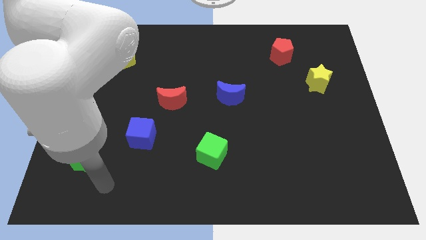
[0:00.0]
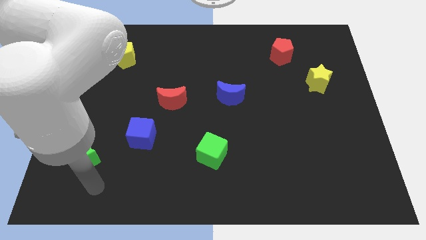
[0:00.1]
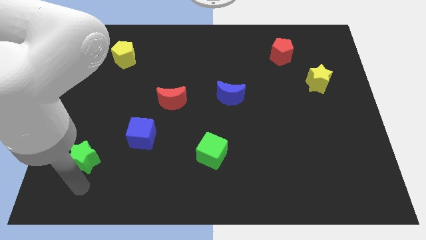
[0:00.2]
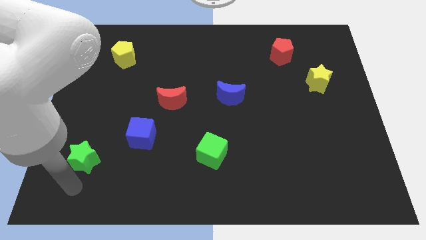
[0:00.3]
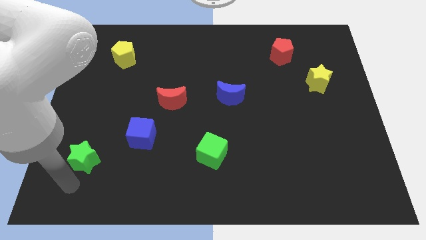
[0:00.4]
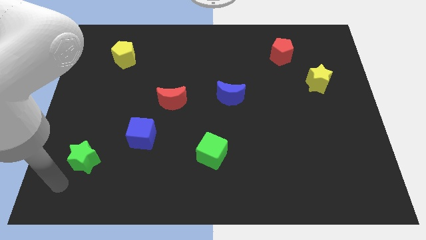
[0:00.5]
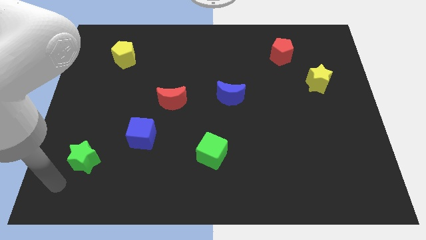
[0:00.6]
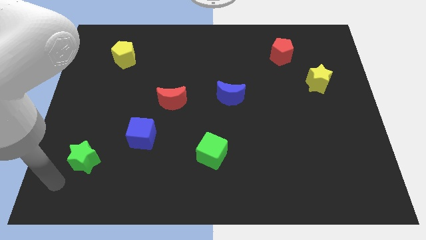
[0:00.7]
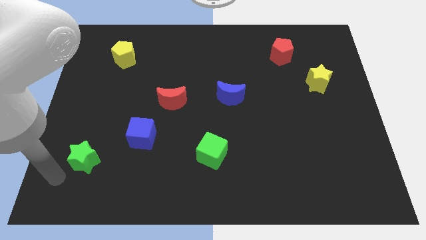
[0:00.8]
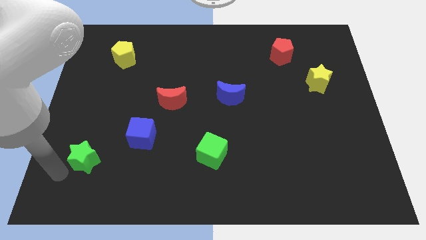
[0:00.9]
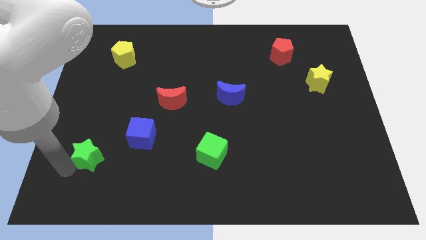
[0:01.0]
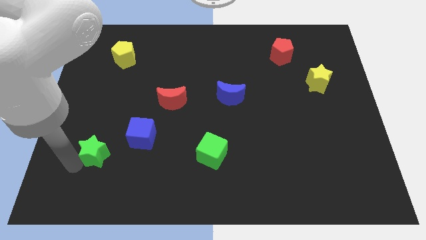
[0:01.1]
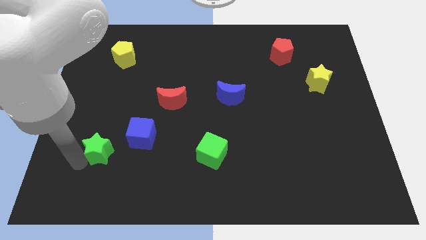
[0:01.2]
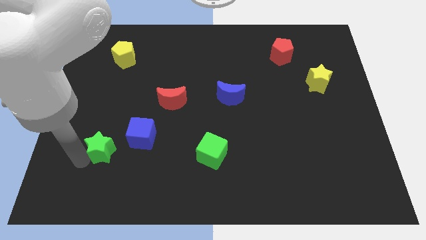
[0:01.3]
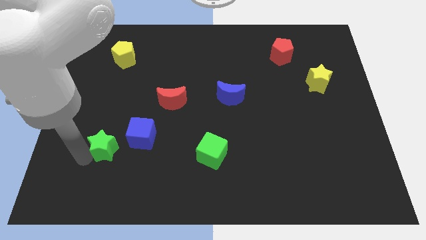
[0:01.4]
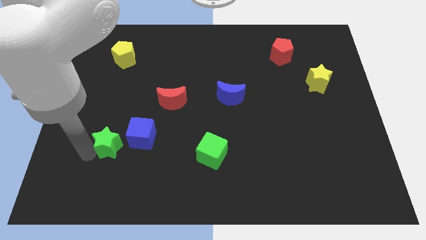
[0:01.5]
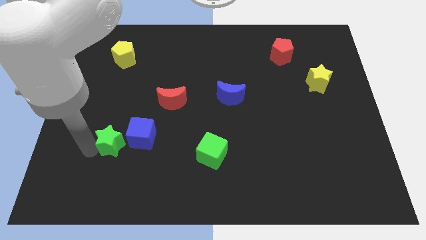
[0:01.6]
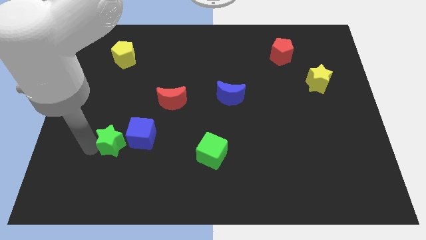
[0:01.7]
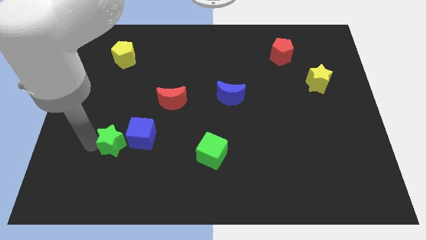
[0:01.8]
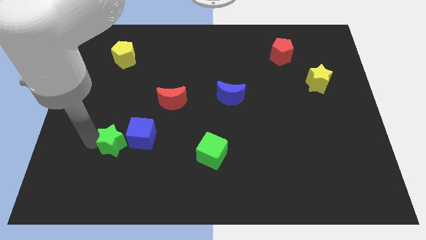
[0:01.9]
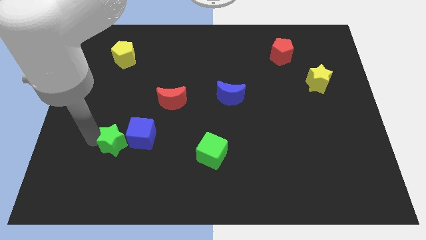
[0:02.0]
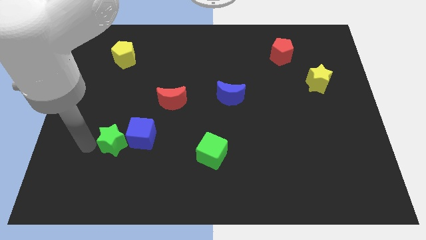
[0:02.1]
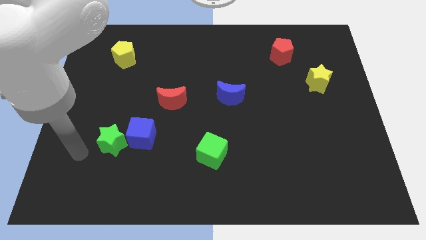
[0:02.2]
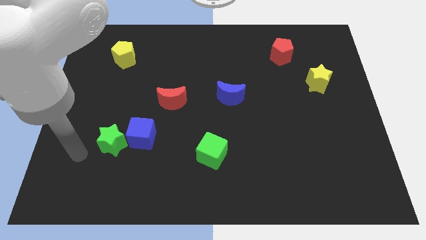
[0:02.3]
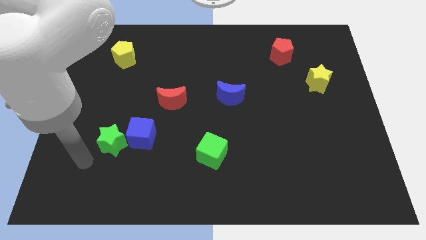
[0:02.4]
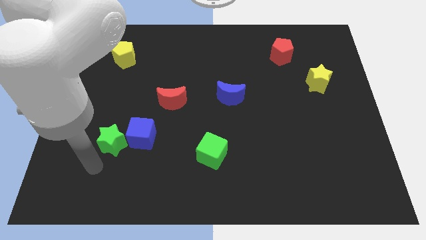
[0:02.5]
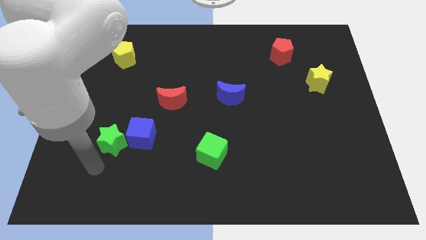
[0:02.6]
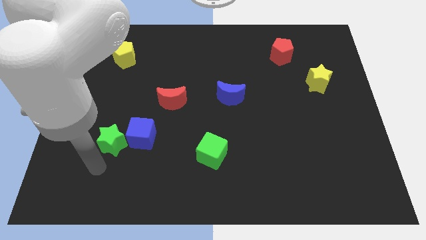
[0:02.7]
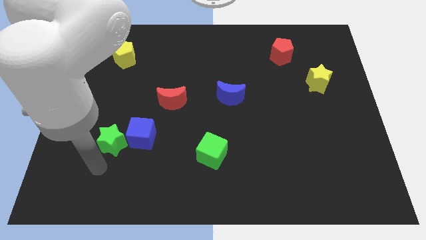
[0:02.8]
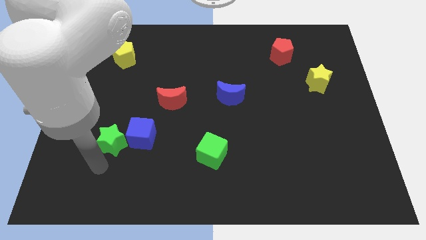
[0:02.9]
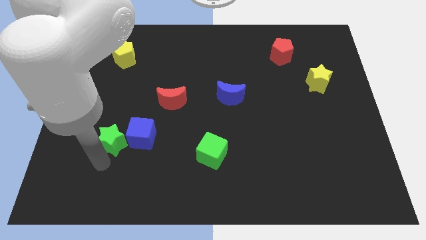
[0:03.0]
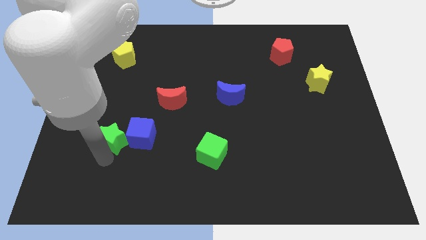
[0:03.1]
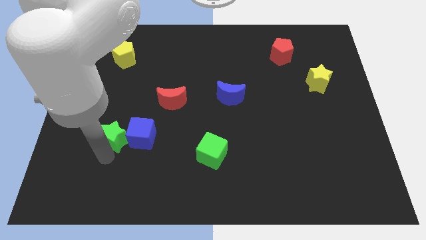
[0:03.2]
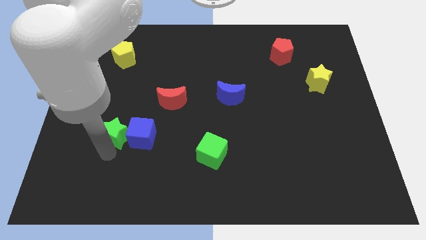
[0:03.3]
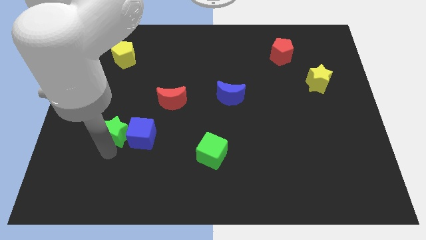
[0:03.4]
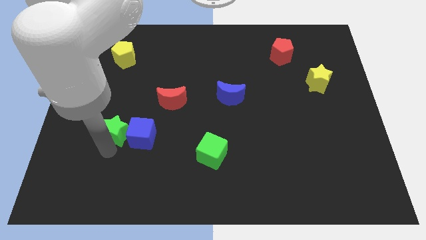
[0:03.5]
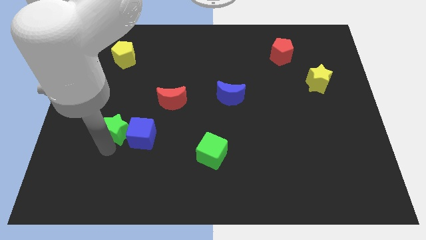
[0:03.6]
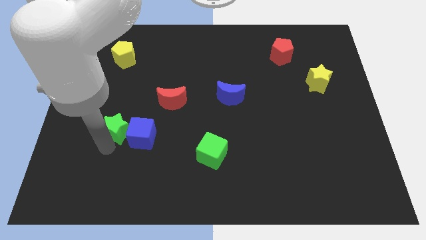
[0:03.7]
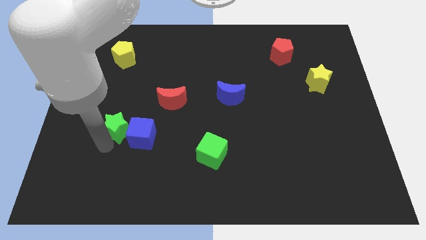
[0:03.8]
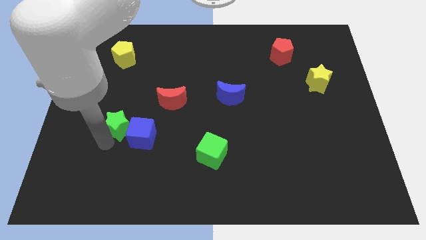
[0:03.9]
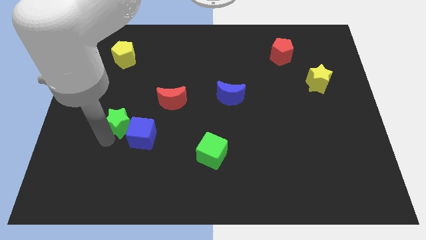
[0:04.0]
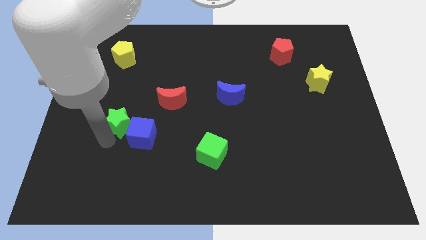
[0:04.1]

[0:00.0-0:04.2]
move the green star to the left of the blue cube

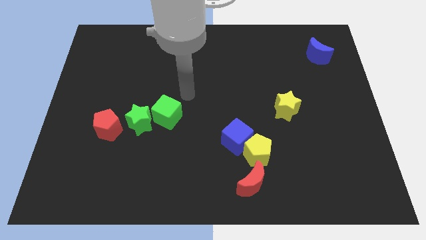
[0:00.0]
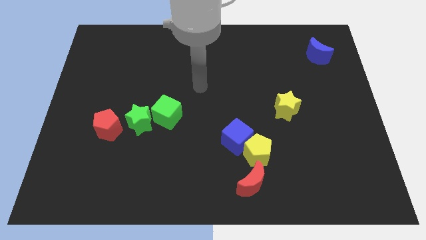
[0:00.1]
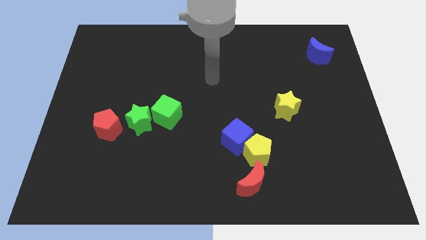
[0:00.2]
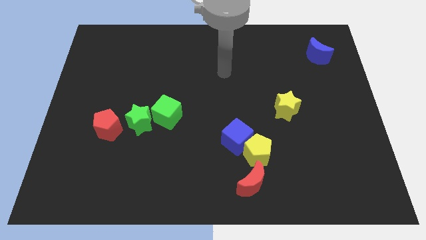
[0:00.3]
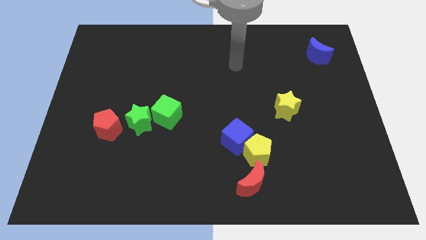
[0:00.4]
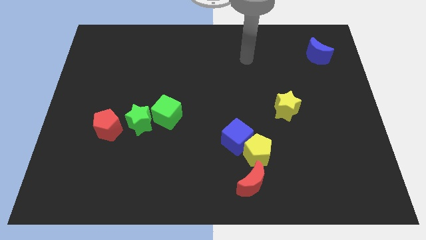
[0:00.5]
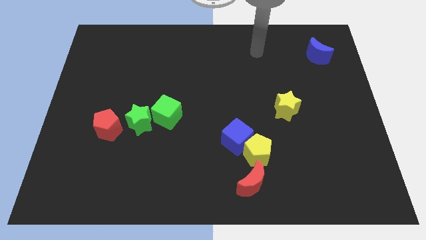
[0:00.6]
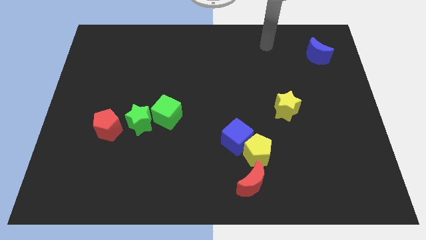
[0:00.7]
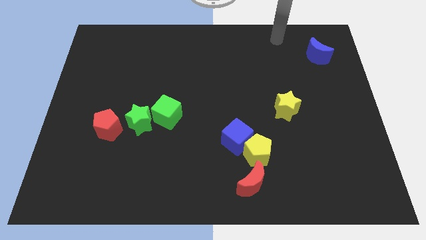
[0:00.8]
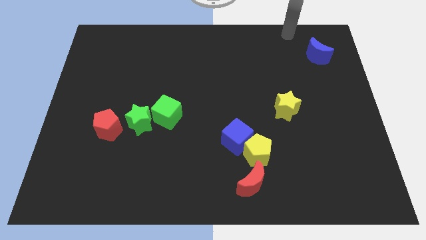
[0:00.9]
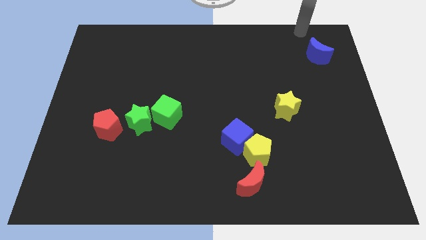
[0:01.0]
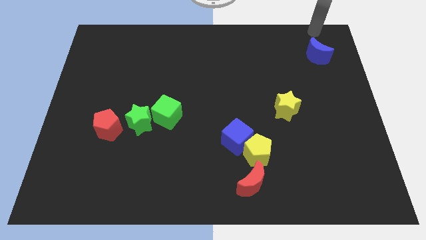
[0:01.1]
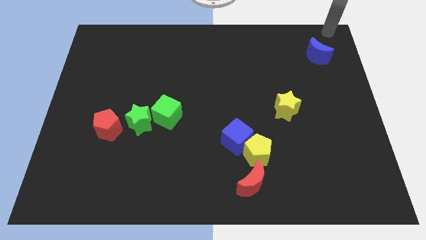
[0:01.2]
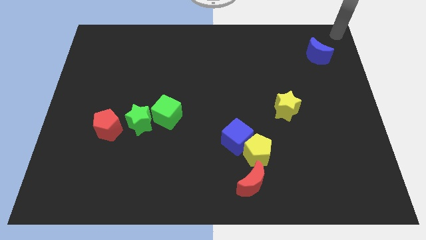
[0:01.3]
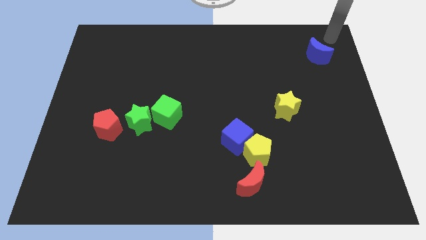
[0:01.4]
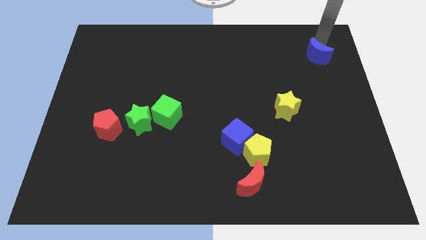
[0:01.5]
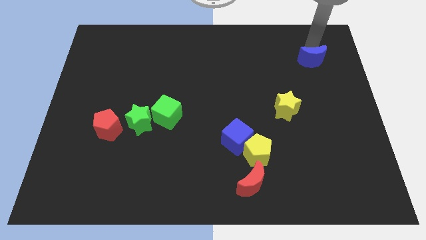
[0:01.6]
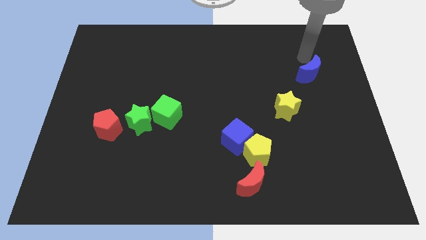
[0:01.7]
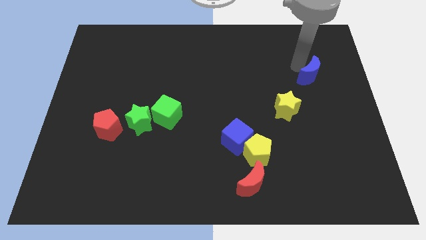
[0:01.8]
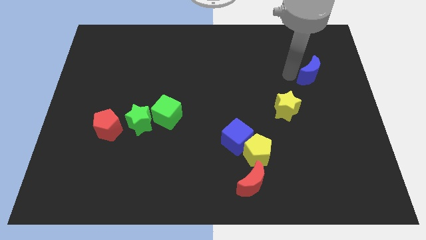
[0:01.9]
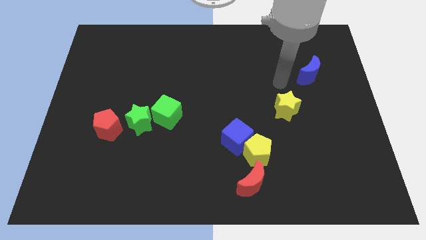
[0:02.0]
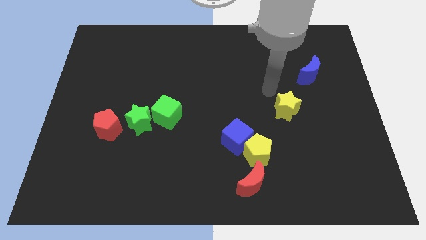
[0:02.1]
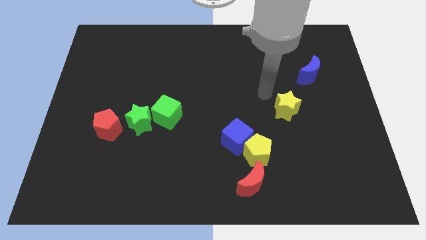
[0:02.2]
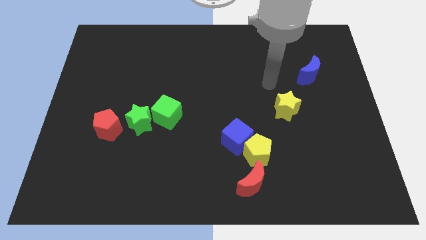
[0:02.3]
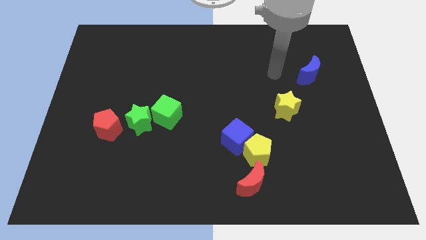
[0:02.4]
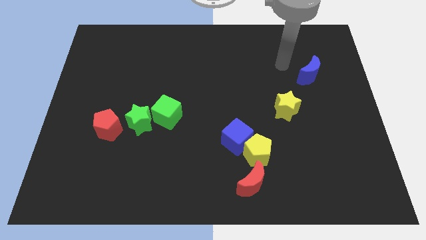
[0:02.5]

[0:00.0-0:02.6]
move the blue crescent to the top right of the yellow star

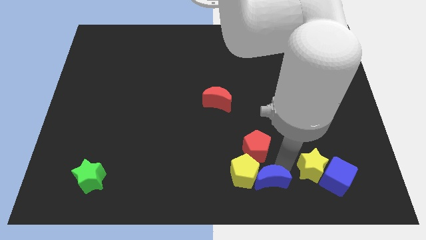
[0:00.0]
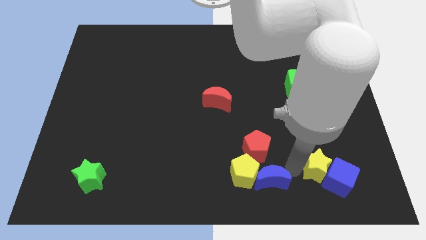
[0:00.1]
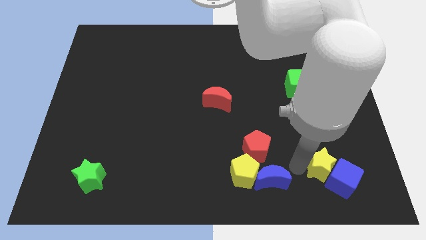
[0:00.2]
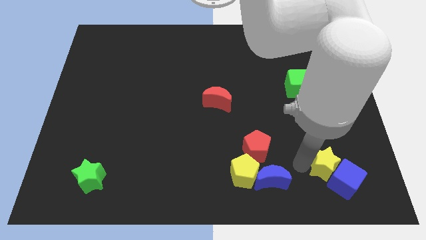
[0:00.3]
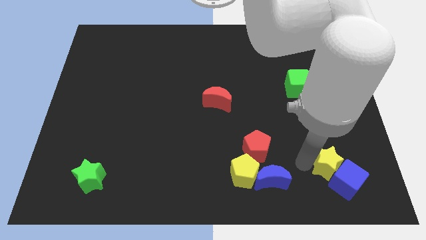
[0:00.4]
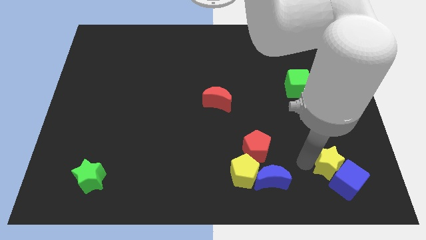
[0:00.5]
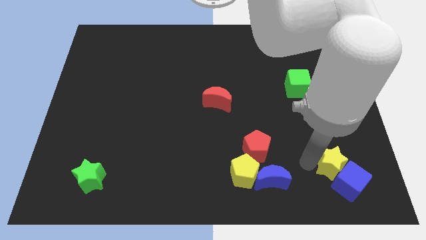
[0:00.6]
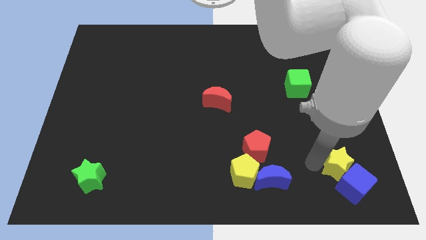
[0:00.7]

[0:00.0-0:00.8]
push the yellow star and blue cube slightly towards the bottom right

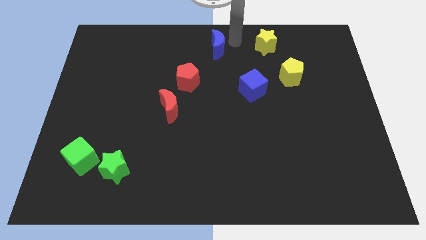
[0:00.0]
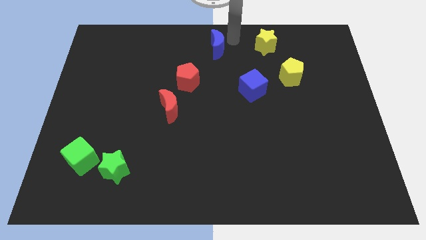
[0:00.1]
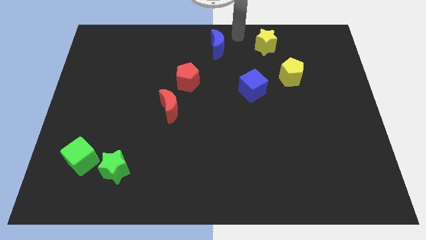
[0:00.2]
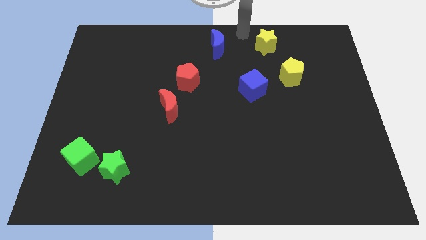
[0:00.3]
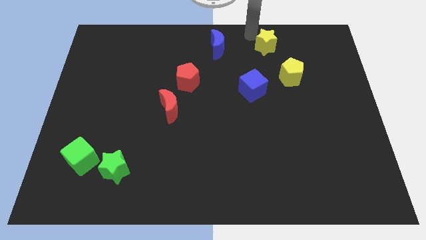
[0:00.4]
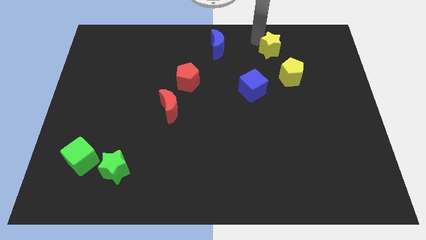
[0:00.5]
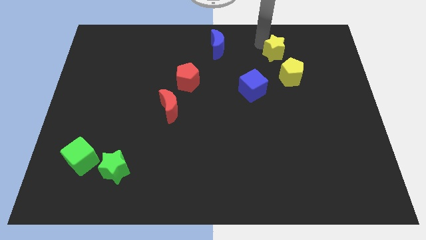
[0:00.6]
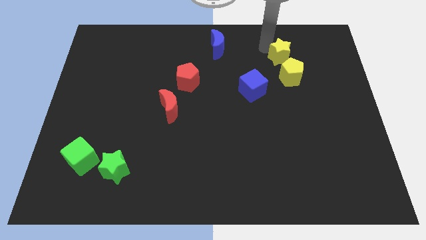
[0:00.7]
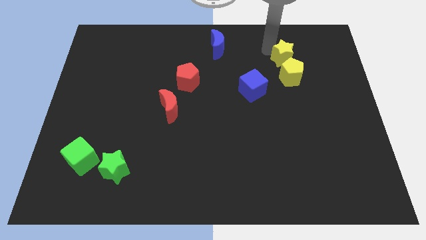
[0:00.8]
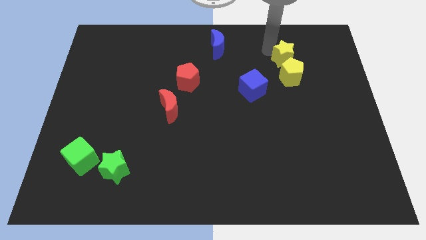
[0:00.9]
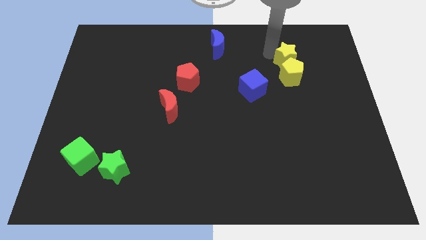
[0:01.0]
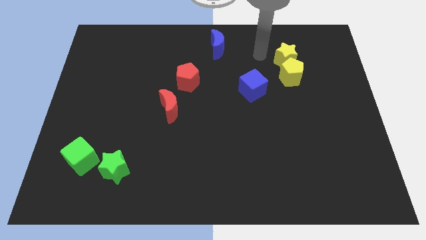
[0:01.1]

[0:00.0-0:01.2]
place the yellow star above the yellow pentagon

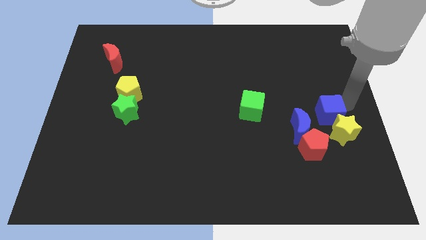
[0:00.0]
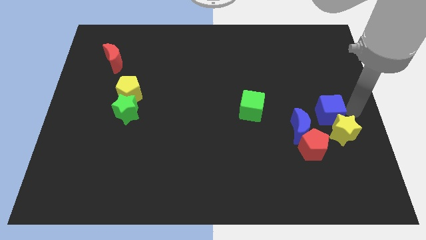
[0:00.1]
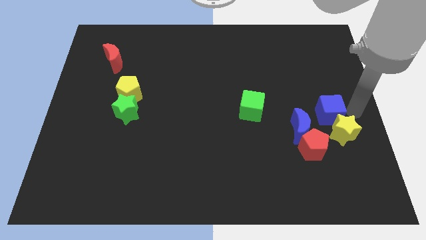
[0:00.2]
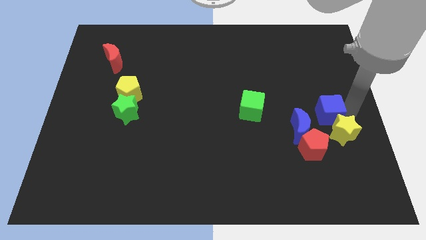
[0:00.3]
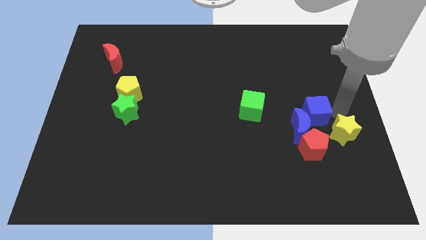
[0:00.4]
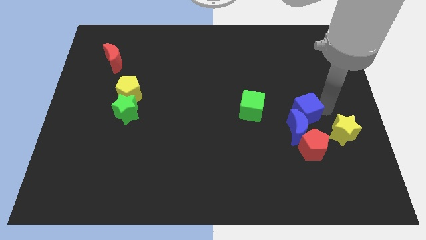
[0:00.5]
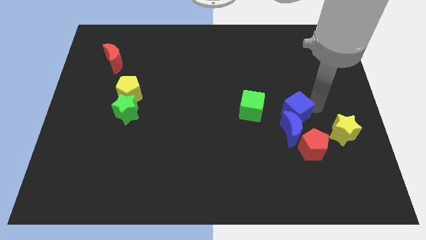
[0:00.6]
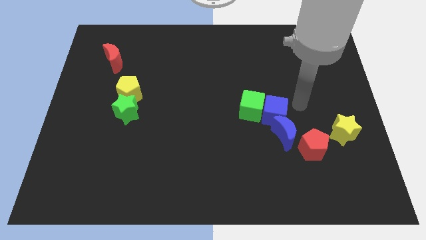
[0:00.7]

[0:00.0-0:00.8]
separate blue cube from yellow star
